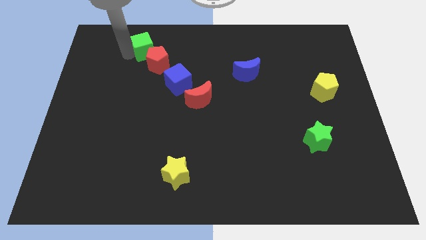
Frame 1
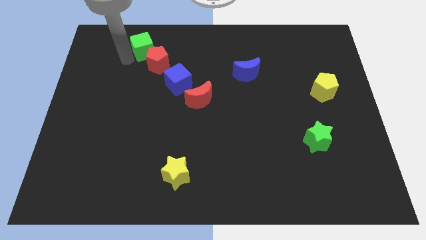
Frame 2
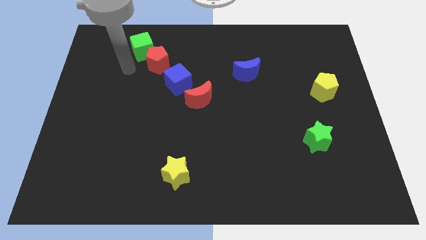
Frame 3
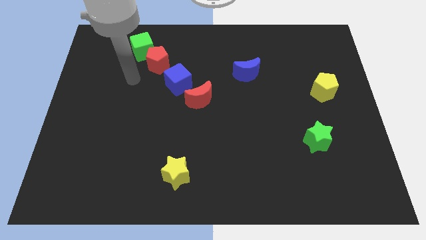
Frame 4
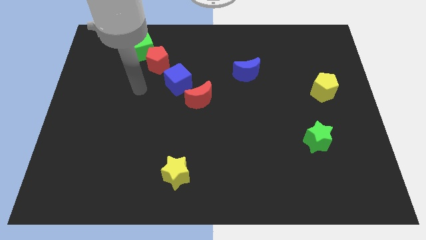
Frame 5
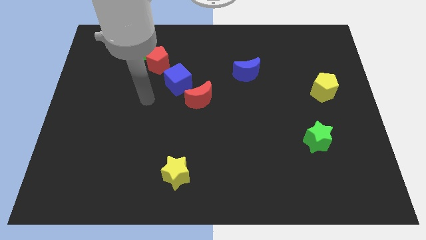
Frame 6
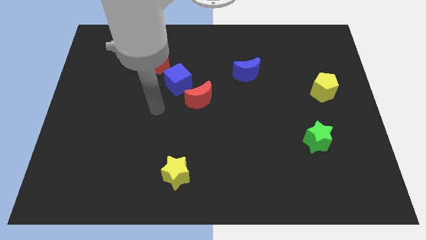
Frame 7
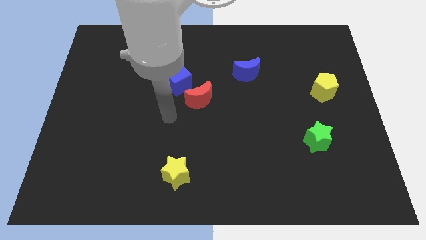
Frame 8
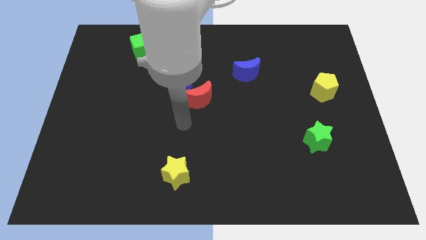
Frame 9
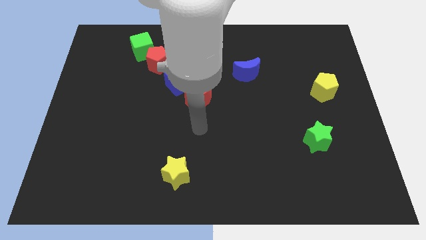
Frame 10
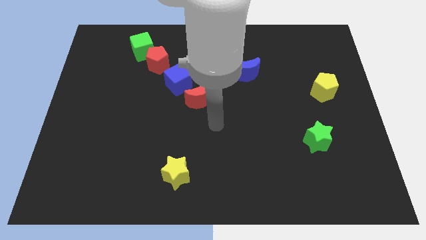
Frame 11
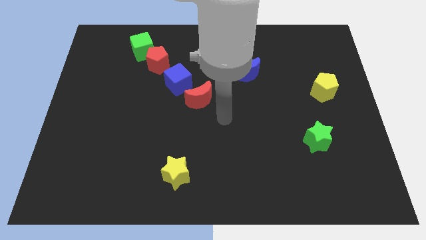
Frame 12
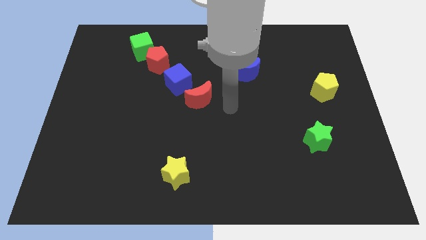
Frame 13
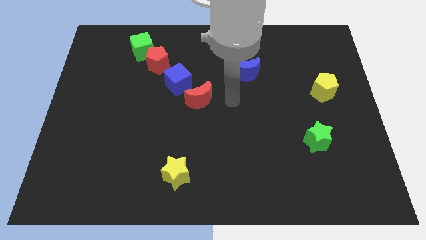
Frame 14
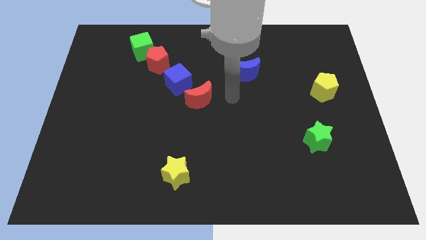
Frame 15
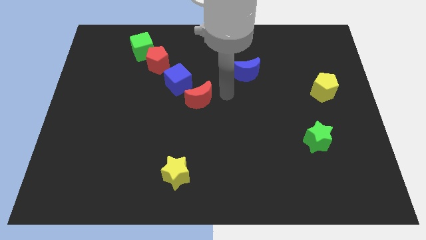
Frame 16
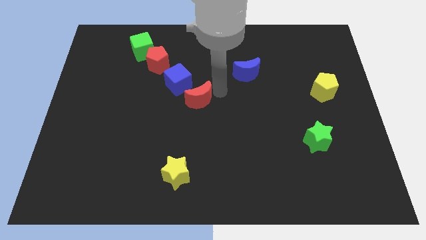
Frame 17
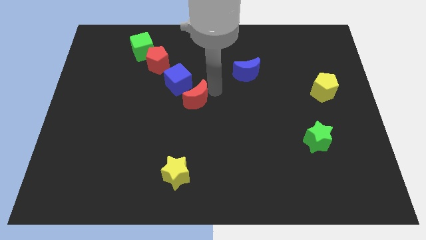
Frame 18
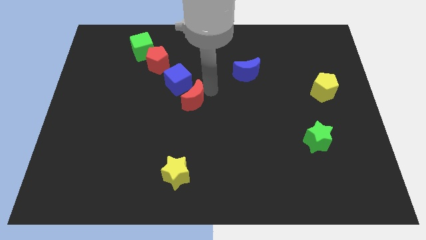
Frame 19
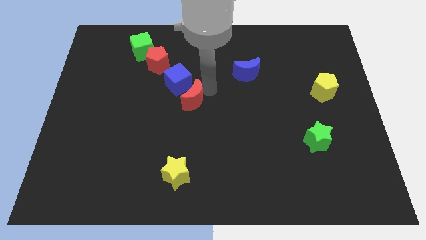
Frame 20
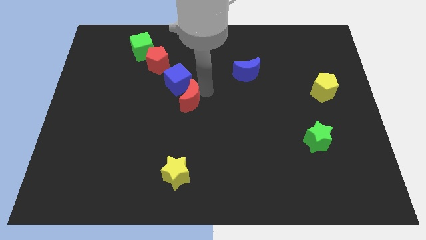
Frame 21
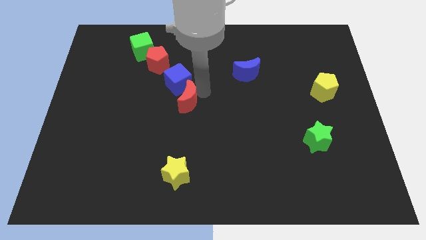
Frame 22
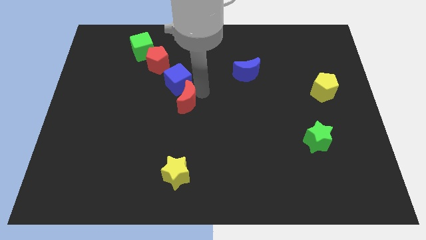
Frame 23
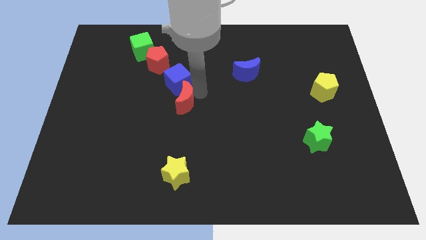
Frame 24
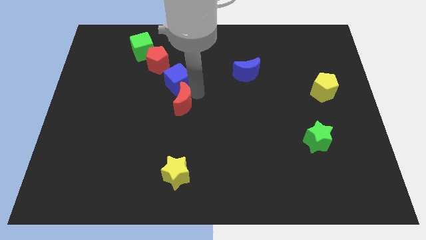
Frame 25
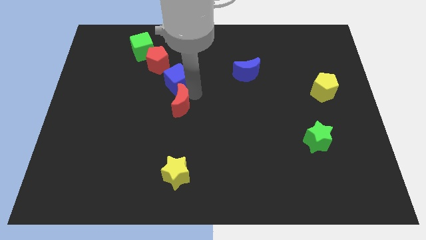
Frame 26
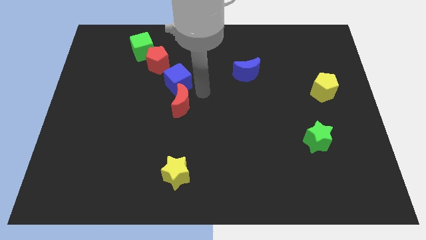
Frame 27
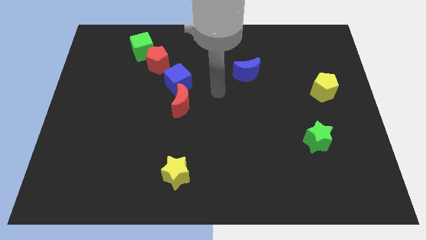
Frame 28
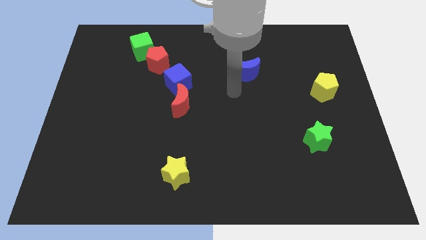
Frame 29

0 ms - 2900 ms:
move the red moon to the bottom left of the blue cube

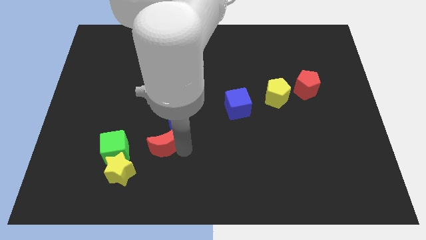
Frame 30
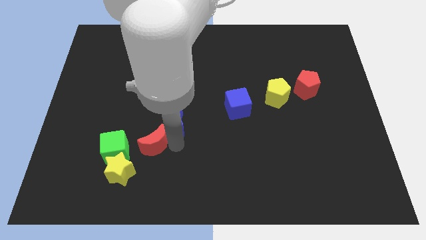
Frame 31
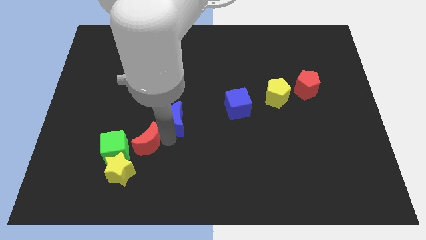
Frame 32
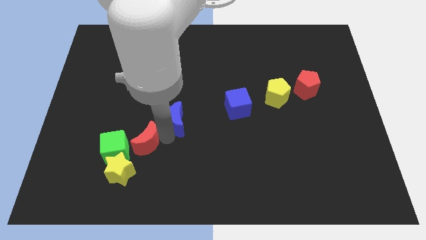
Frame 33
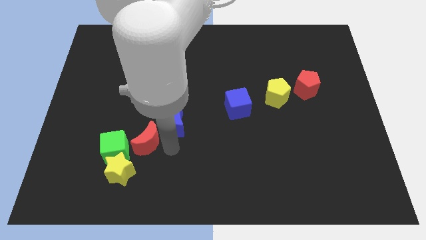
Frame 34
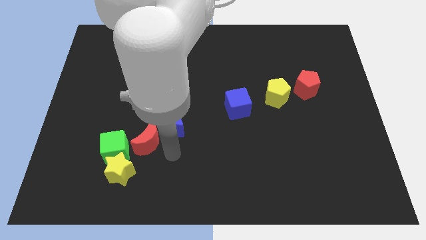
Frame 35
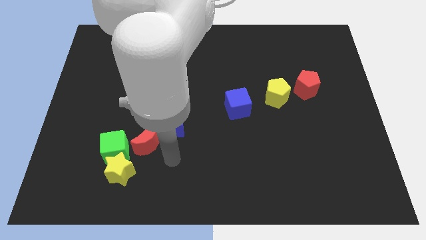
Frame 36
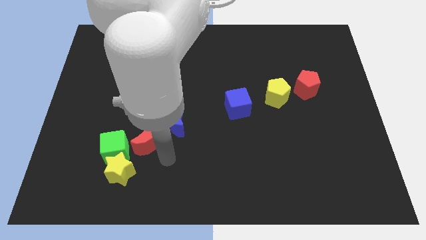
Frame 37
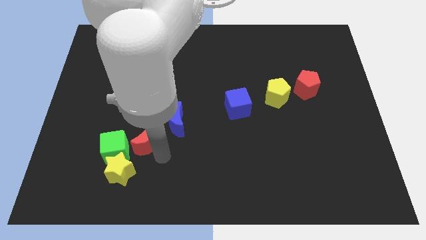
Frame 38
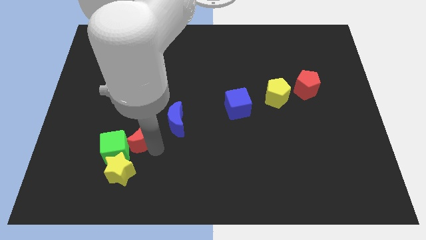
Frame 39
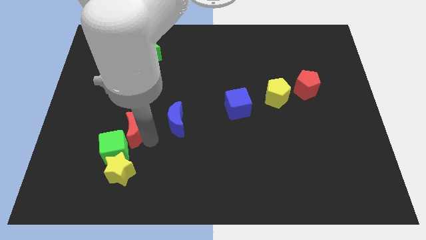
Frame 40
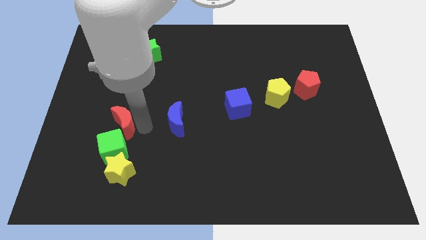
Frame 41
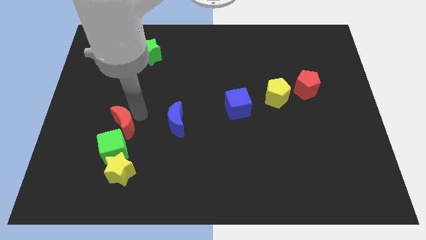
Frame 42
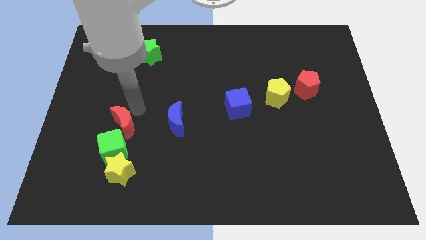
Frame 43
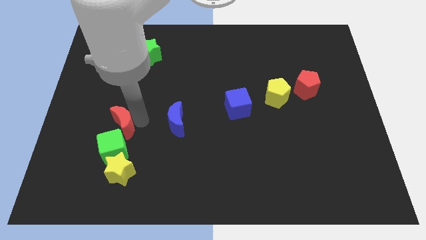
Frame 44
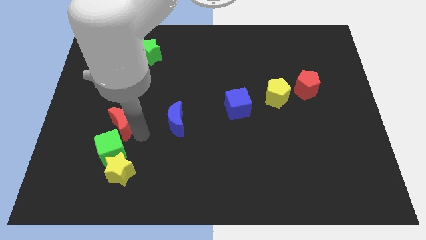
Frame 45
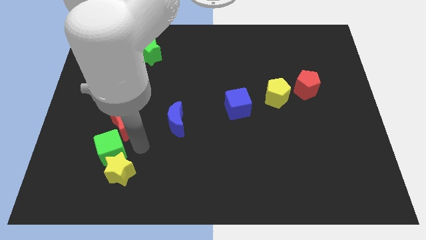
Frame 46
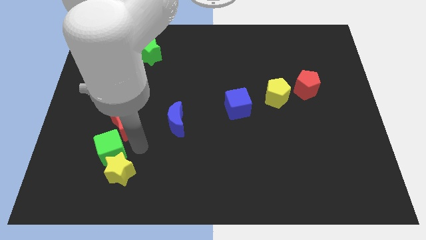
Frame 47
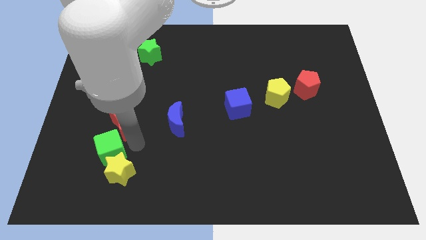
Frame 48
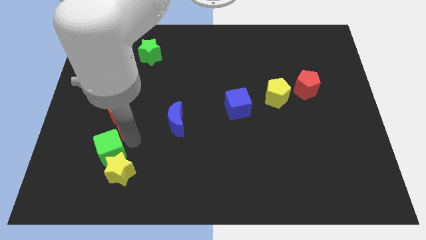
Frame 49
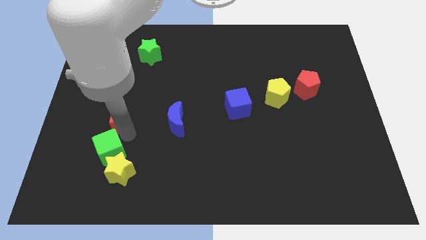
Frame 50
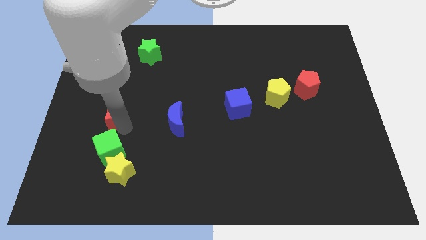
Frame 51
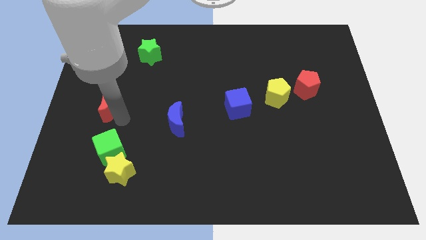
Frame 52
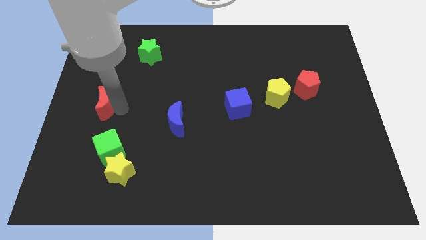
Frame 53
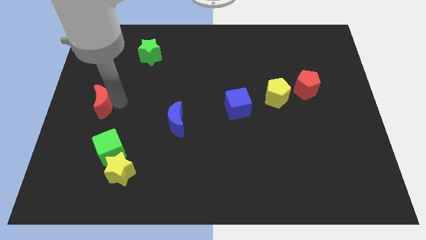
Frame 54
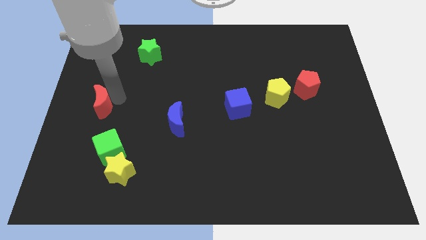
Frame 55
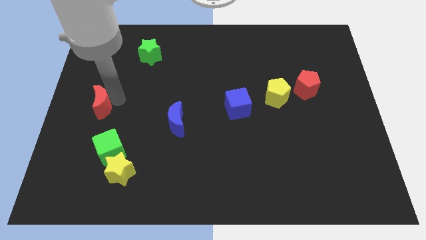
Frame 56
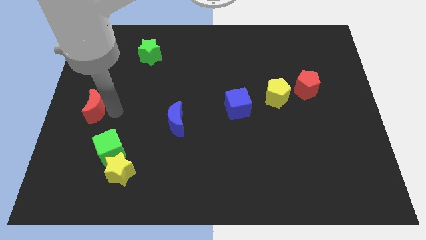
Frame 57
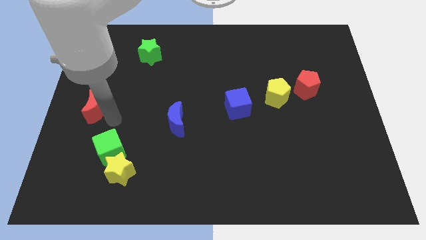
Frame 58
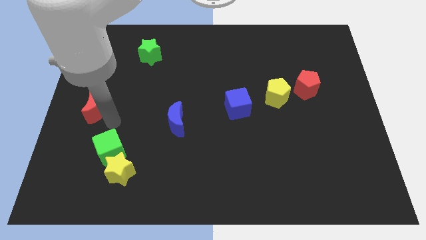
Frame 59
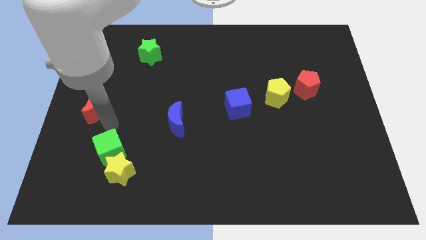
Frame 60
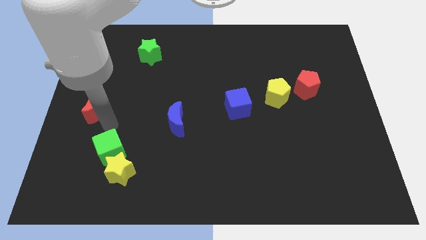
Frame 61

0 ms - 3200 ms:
push red crescent above green cube

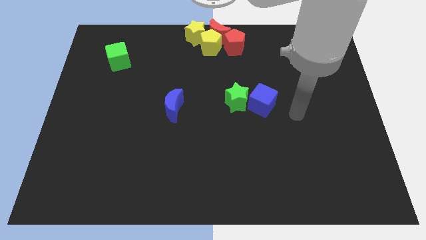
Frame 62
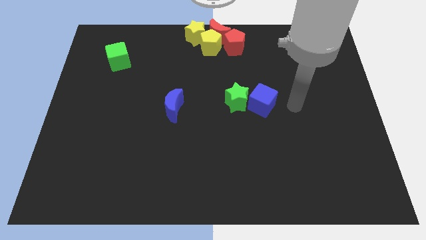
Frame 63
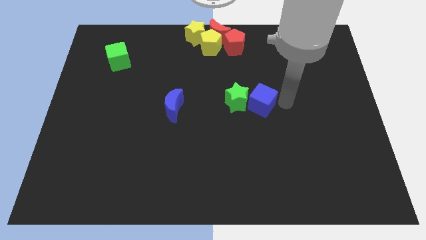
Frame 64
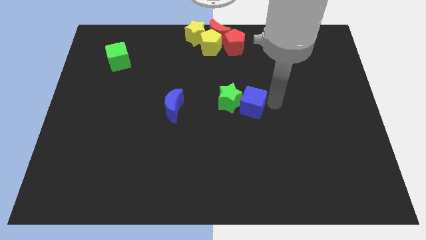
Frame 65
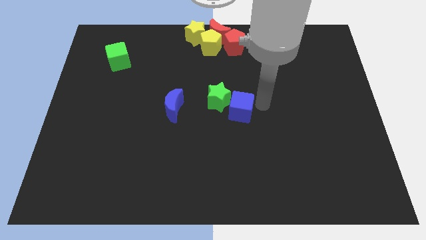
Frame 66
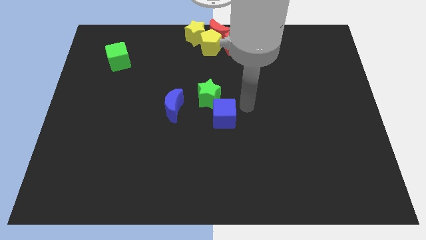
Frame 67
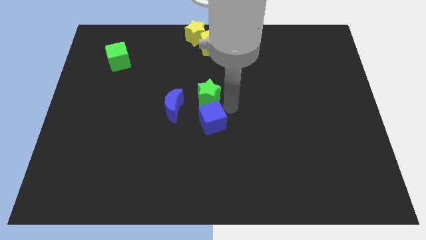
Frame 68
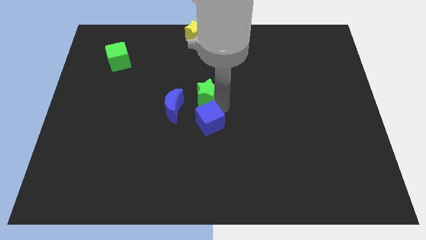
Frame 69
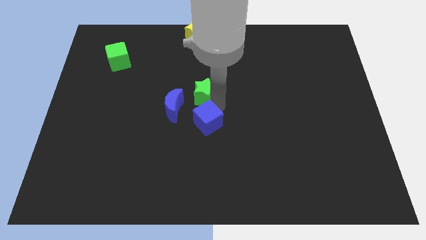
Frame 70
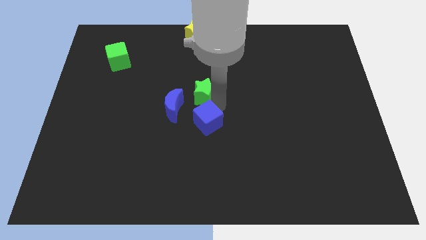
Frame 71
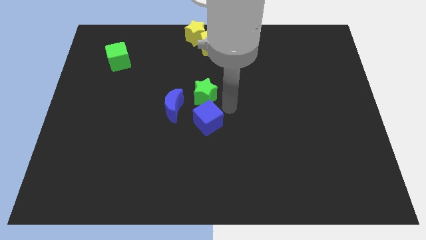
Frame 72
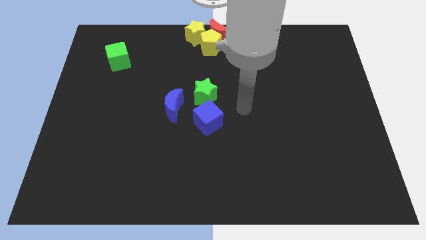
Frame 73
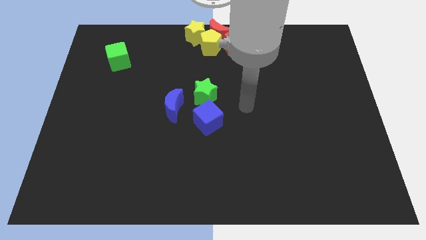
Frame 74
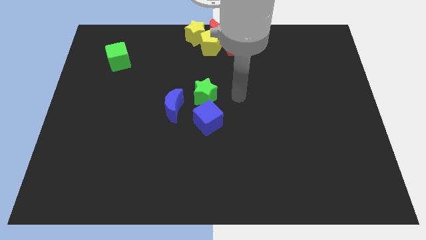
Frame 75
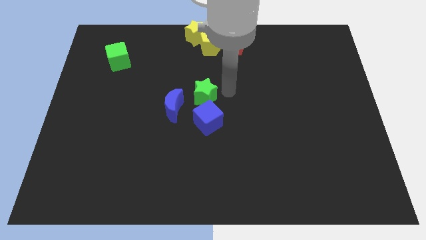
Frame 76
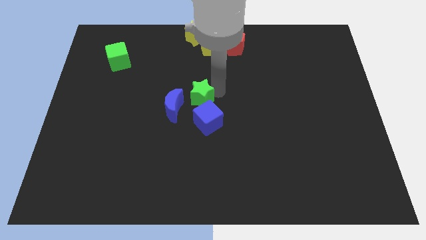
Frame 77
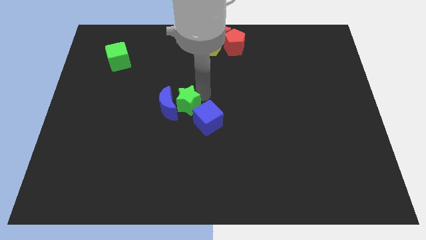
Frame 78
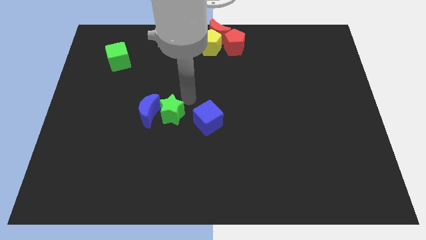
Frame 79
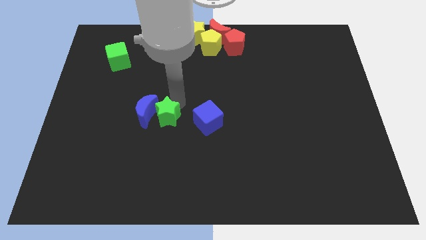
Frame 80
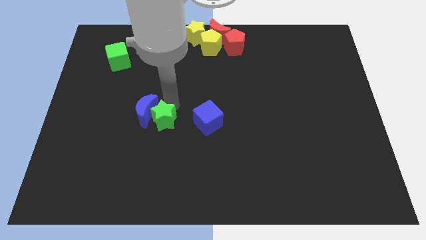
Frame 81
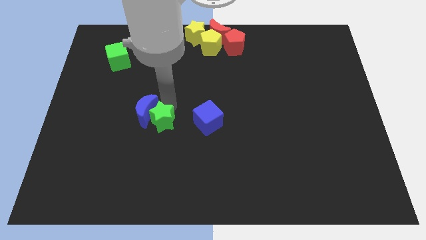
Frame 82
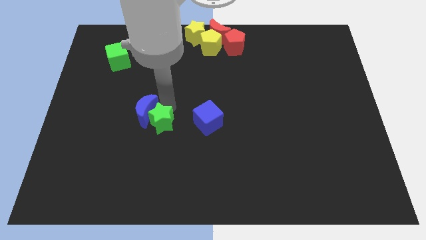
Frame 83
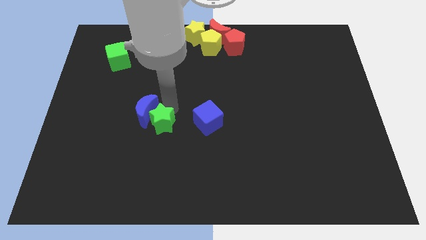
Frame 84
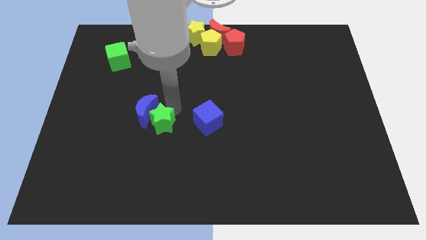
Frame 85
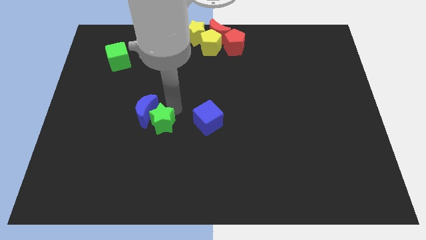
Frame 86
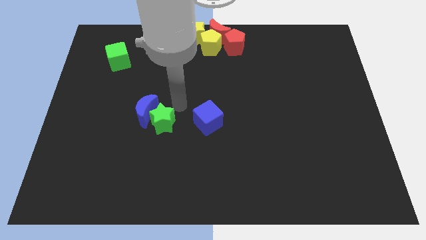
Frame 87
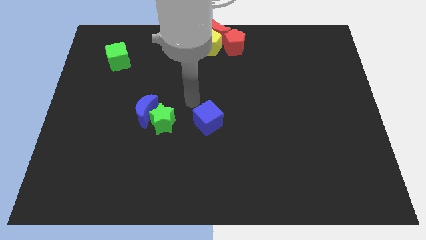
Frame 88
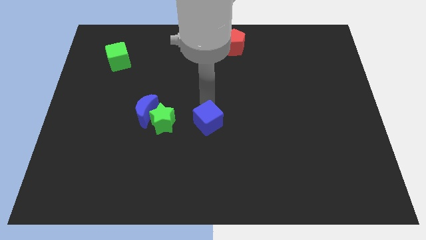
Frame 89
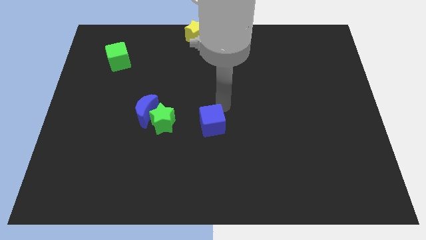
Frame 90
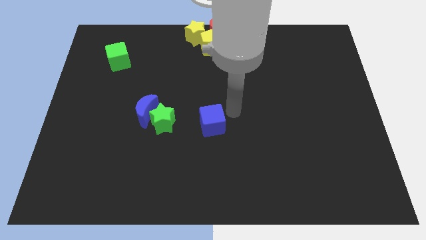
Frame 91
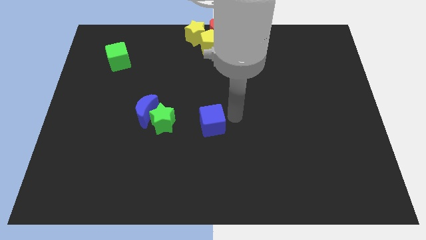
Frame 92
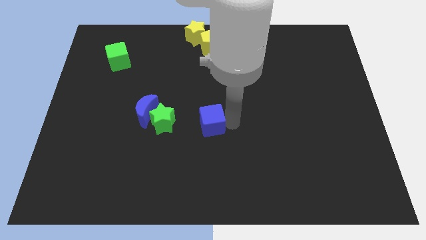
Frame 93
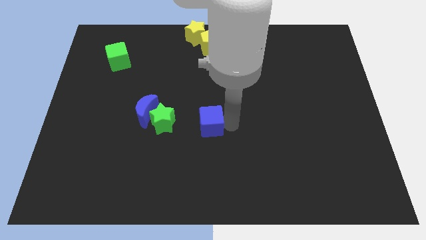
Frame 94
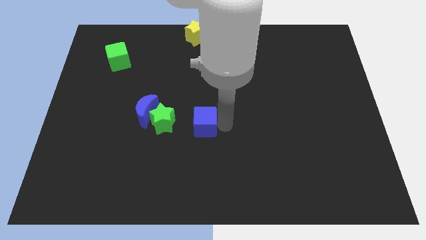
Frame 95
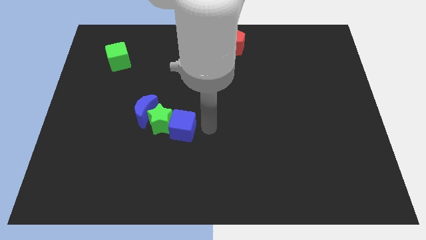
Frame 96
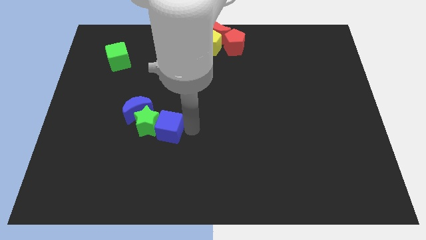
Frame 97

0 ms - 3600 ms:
make a diagonal line out of blue blocks and the green star
